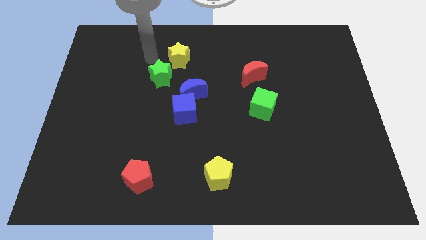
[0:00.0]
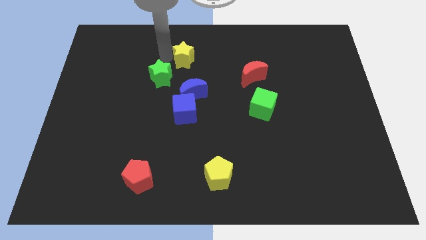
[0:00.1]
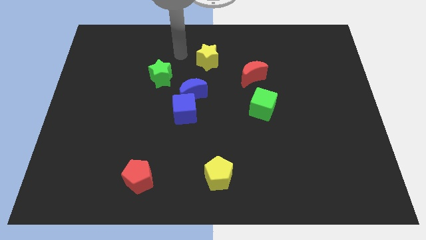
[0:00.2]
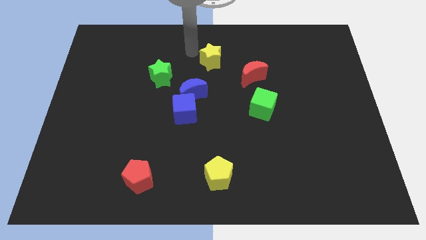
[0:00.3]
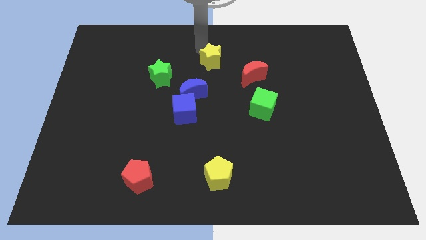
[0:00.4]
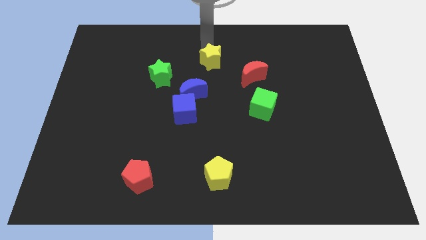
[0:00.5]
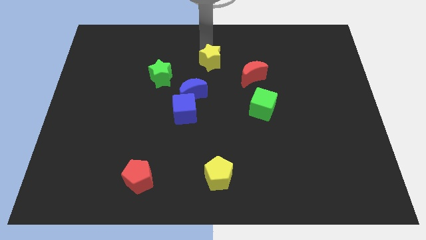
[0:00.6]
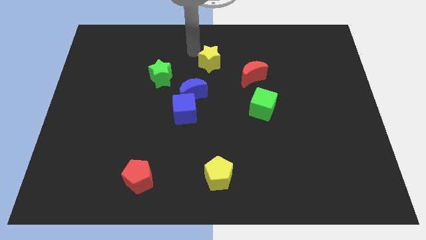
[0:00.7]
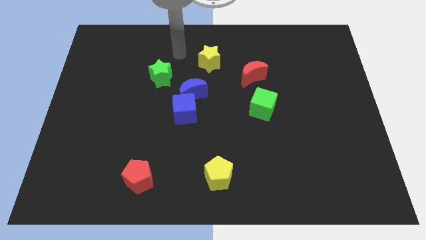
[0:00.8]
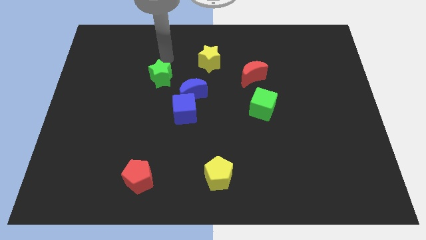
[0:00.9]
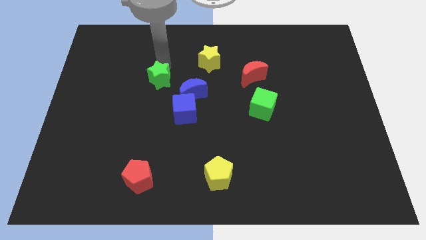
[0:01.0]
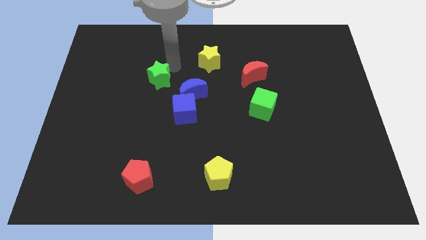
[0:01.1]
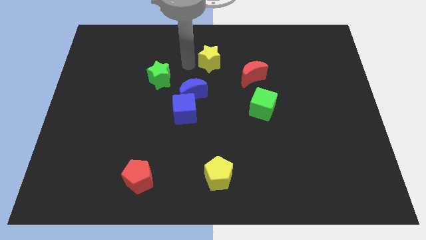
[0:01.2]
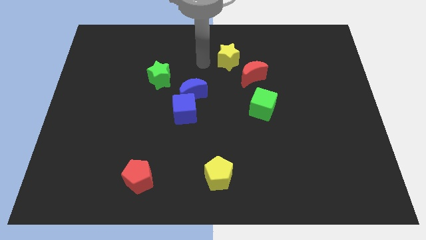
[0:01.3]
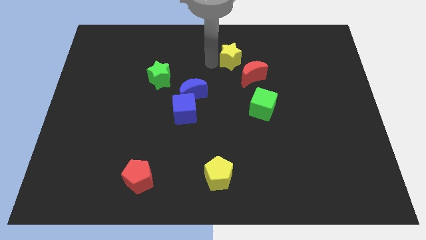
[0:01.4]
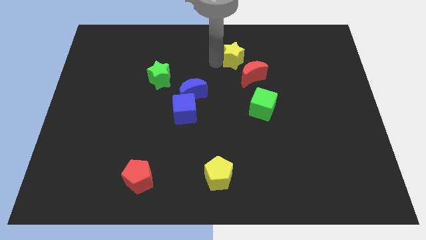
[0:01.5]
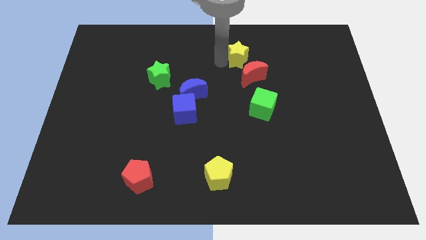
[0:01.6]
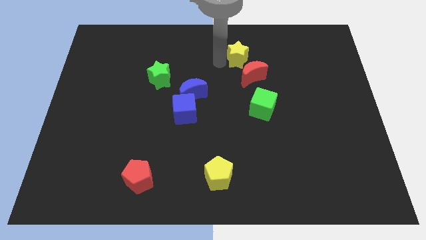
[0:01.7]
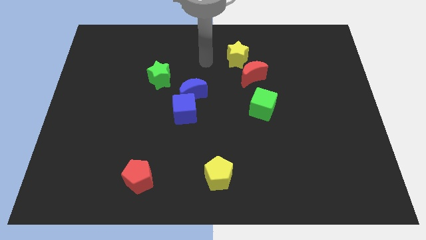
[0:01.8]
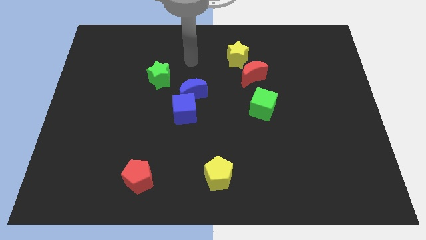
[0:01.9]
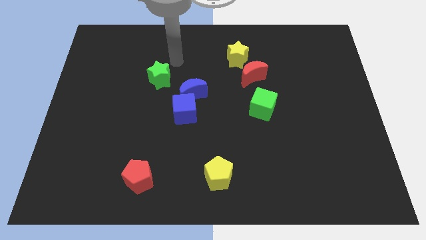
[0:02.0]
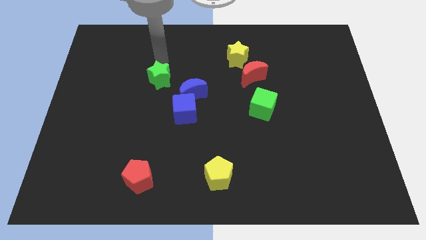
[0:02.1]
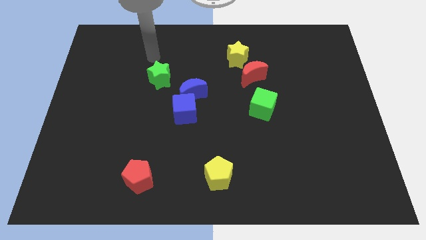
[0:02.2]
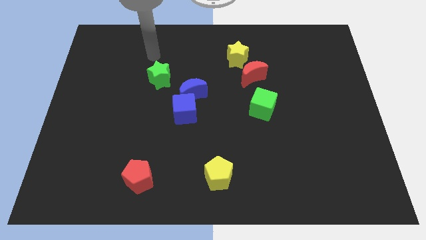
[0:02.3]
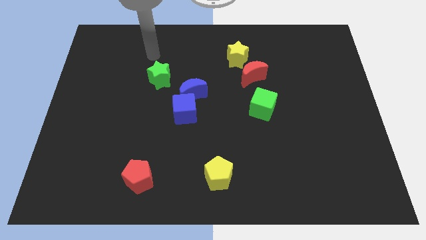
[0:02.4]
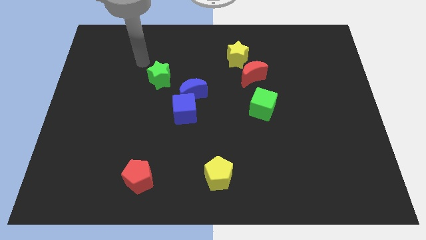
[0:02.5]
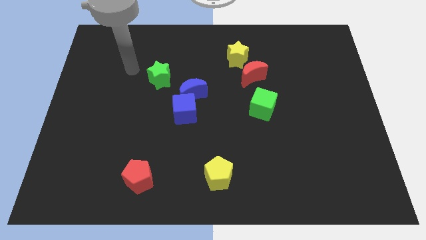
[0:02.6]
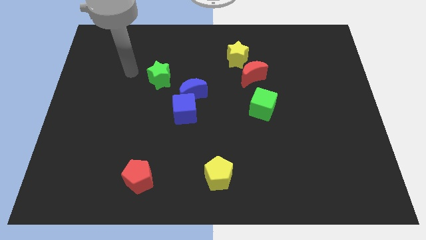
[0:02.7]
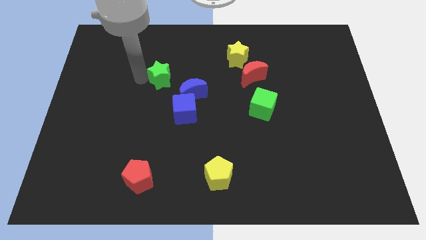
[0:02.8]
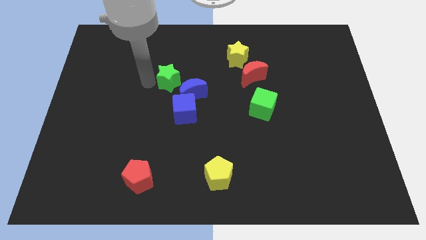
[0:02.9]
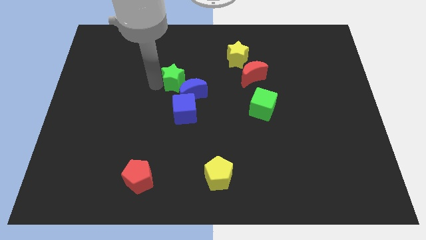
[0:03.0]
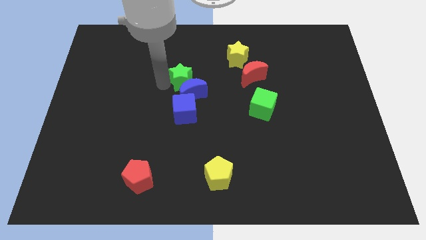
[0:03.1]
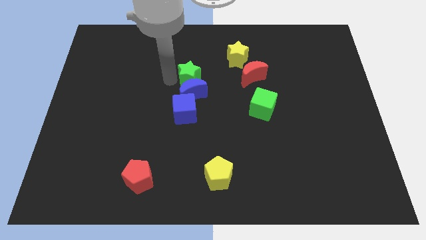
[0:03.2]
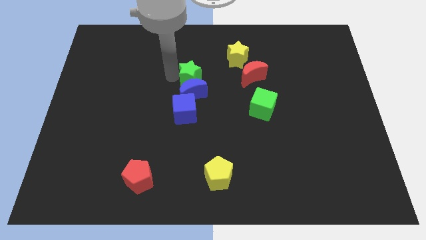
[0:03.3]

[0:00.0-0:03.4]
push the green star to the top side of the blue moon

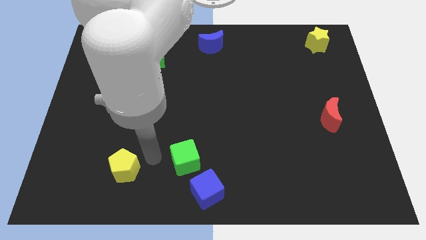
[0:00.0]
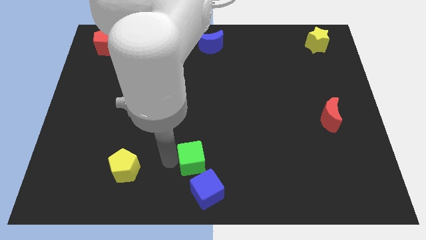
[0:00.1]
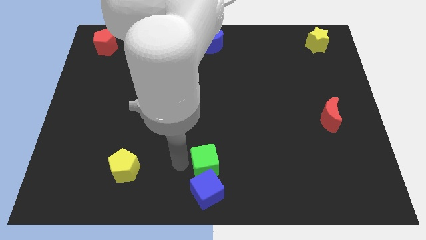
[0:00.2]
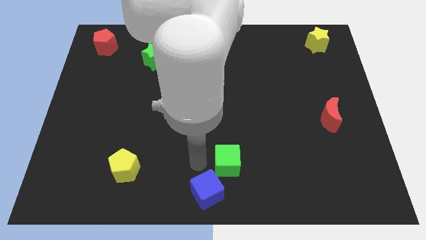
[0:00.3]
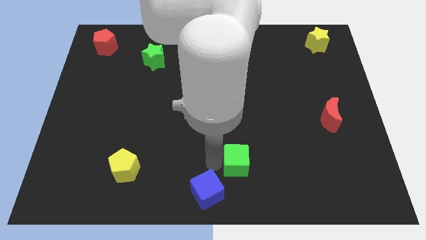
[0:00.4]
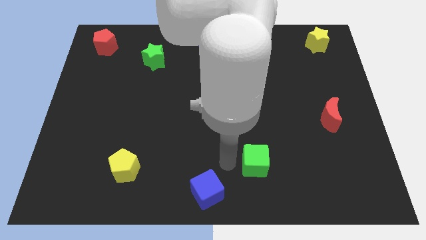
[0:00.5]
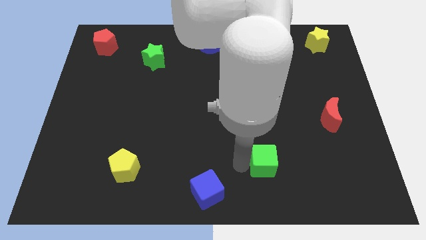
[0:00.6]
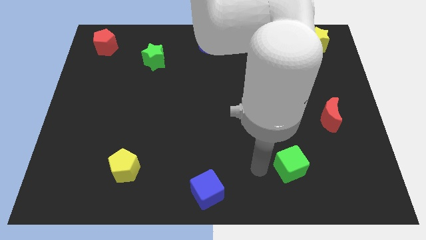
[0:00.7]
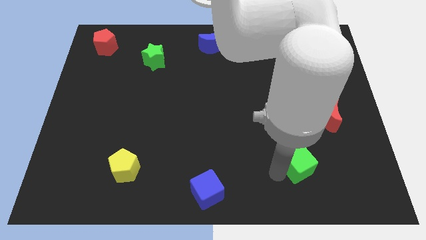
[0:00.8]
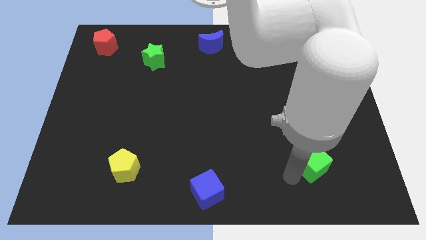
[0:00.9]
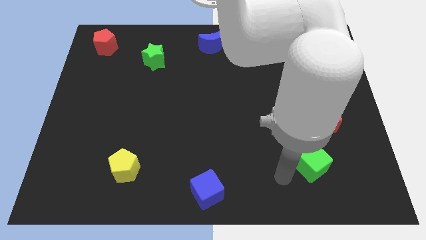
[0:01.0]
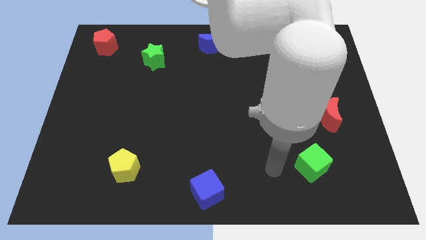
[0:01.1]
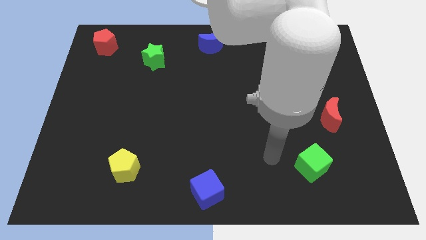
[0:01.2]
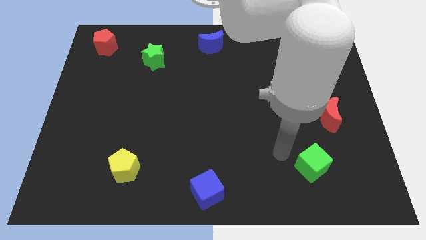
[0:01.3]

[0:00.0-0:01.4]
move the green cube away from the blue cube

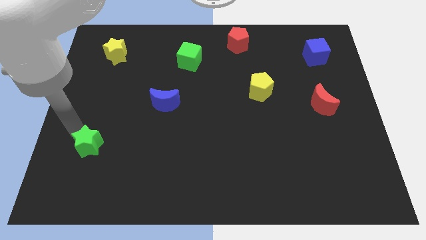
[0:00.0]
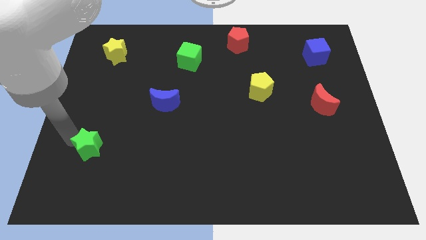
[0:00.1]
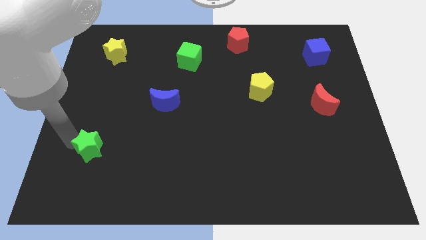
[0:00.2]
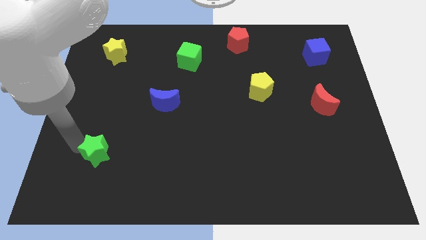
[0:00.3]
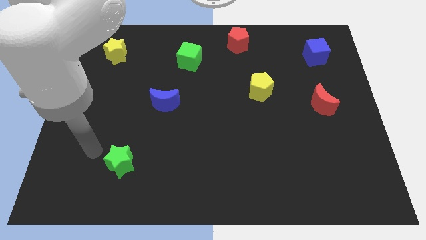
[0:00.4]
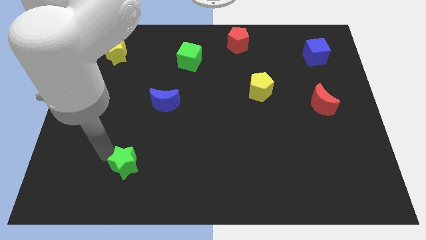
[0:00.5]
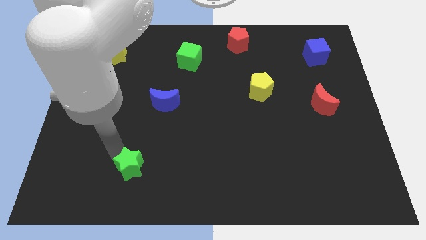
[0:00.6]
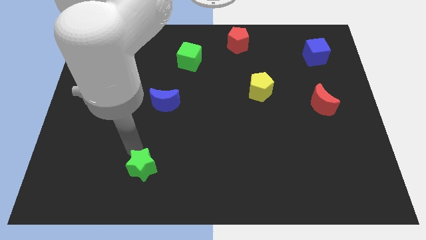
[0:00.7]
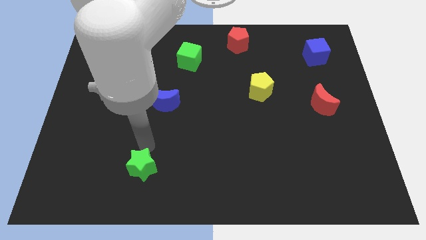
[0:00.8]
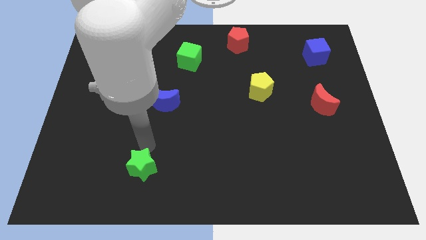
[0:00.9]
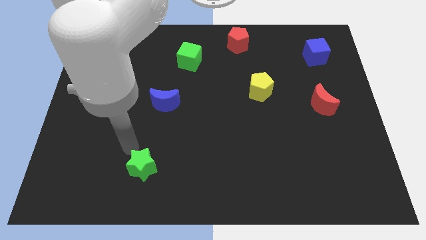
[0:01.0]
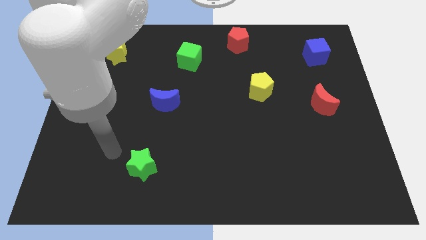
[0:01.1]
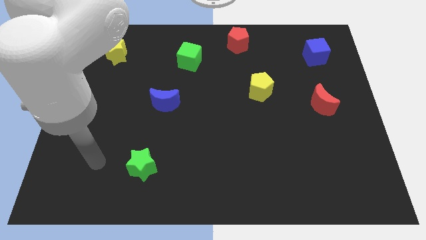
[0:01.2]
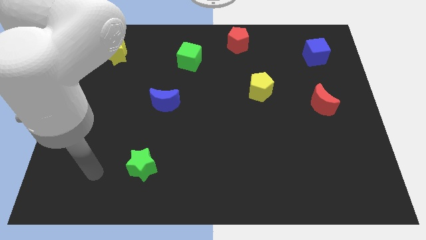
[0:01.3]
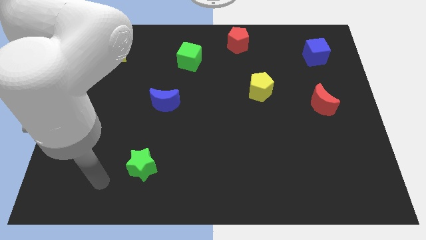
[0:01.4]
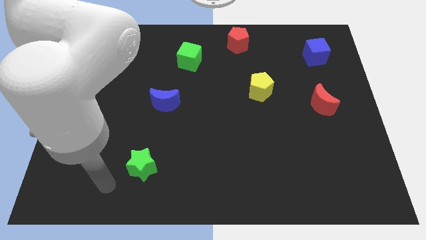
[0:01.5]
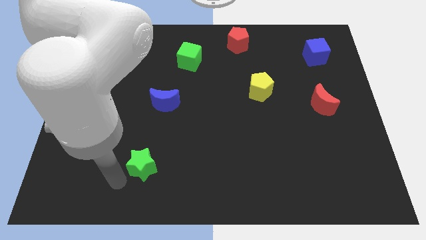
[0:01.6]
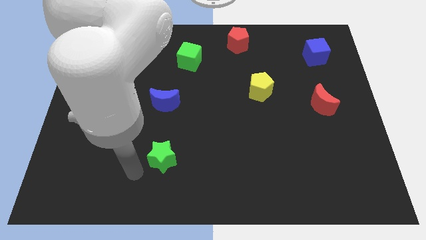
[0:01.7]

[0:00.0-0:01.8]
place the green star vertically below blue moon

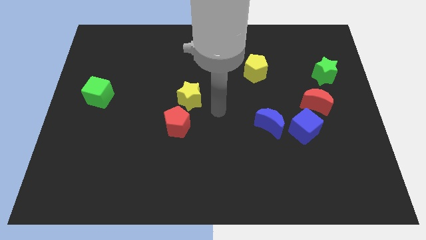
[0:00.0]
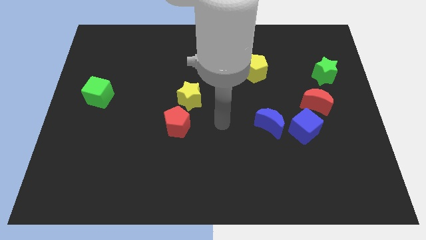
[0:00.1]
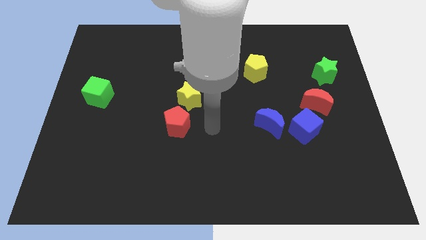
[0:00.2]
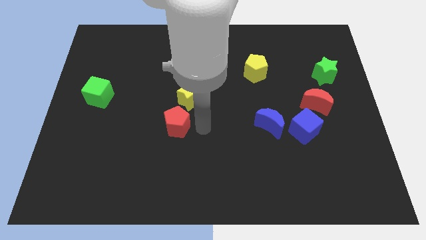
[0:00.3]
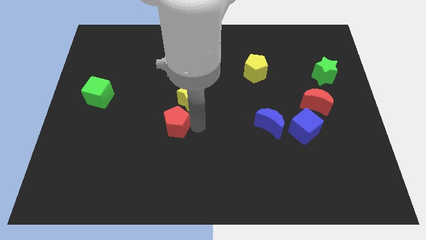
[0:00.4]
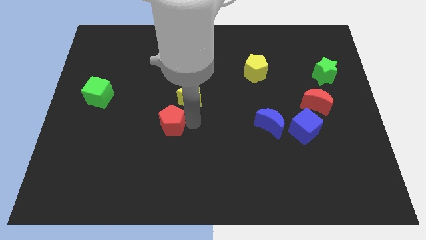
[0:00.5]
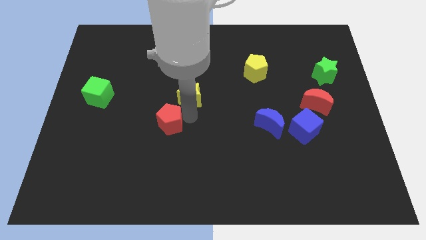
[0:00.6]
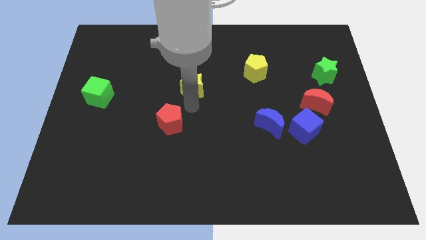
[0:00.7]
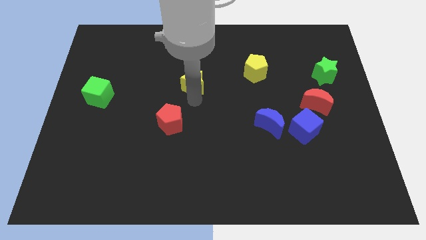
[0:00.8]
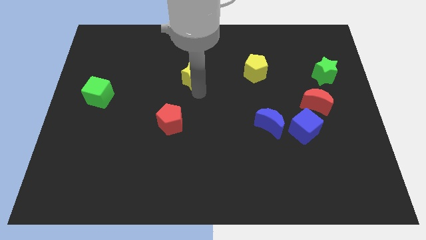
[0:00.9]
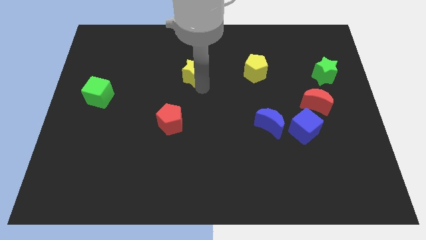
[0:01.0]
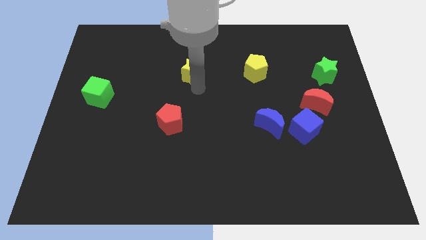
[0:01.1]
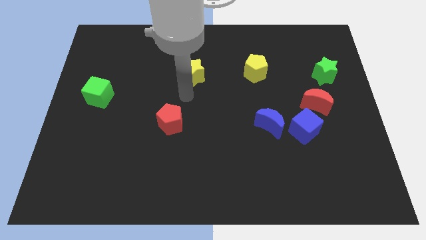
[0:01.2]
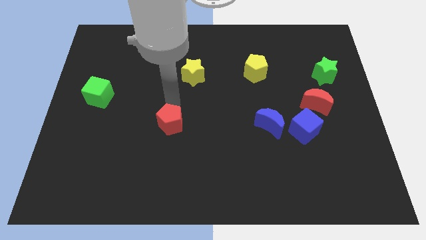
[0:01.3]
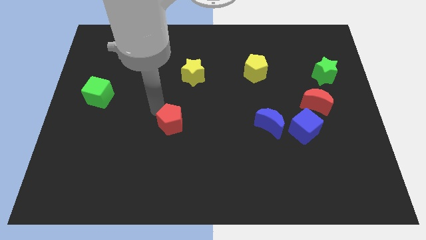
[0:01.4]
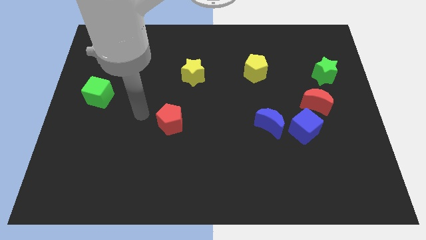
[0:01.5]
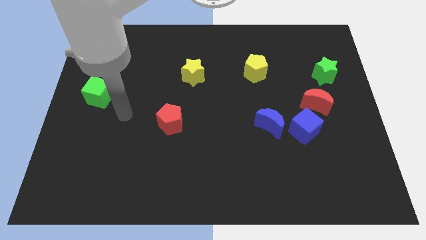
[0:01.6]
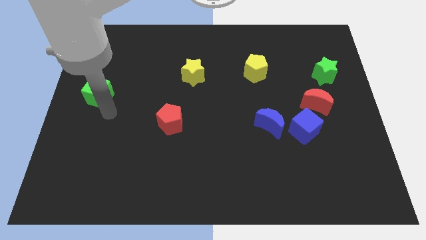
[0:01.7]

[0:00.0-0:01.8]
separate the yellow star and red pentagon

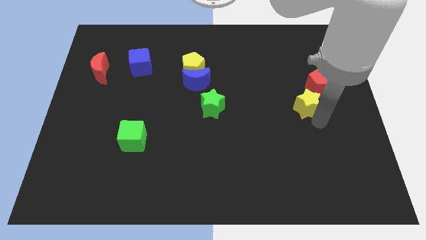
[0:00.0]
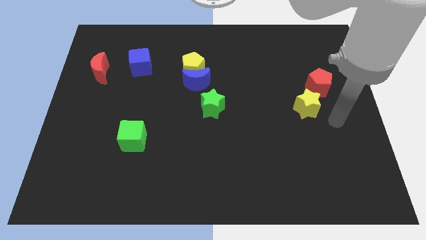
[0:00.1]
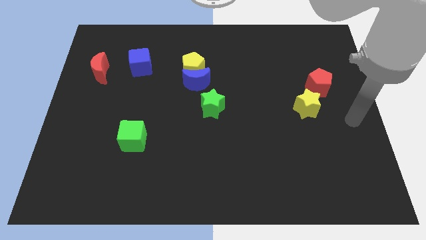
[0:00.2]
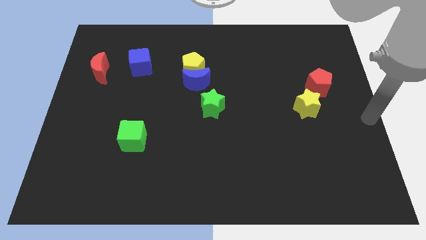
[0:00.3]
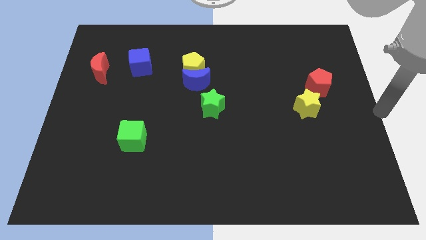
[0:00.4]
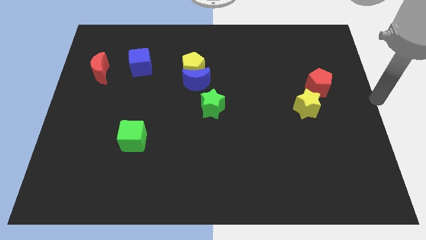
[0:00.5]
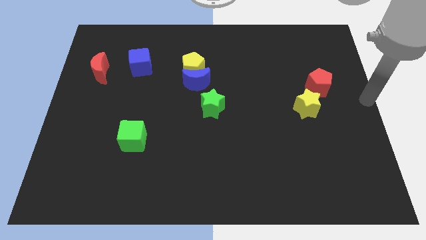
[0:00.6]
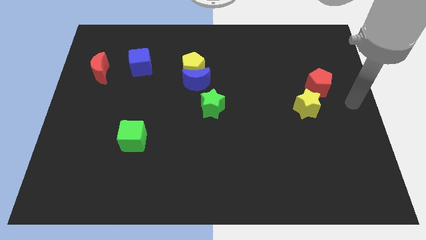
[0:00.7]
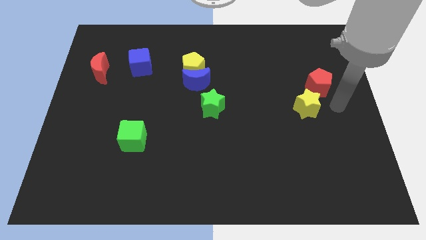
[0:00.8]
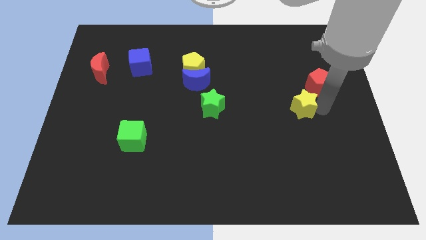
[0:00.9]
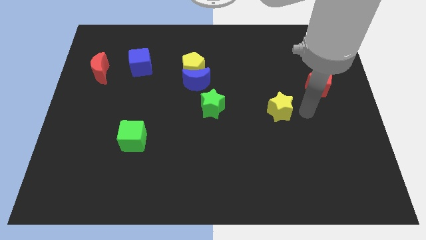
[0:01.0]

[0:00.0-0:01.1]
place the arm right to the yellow star
